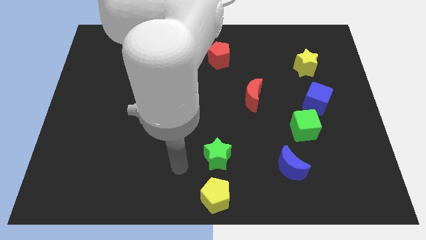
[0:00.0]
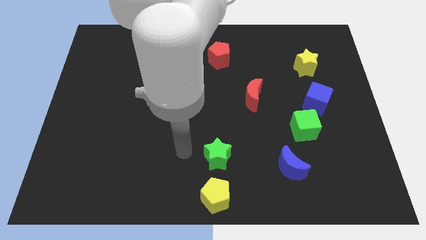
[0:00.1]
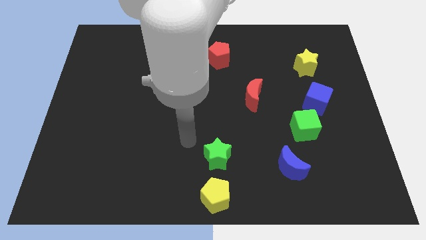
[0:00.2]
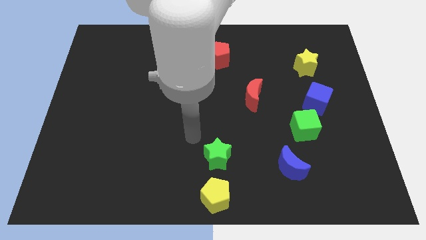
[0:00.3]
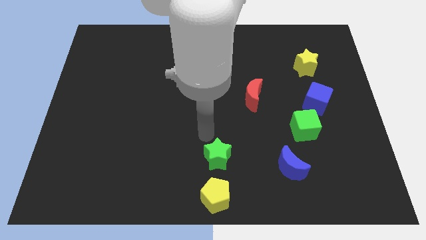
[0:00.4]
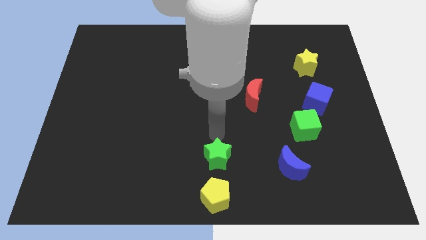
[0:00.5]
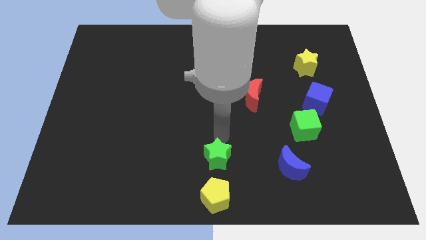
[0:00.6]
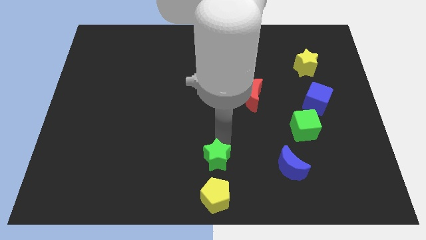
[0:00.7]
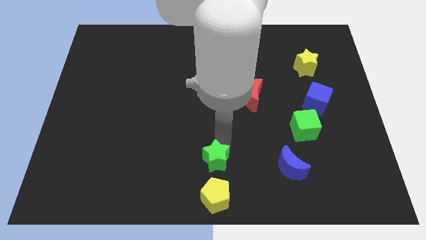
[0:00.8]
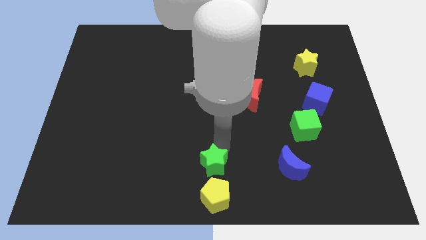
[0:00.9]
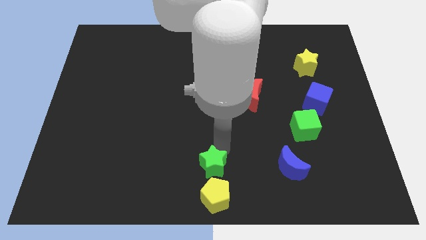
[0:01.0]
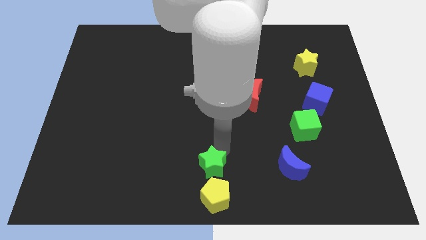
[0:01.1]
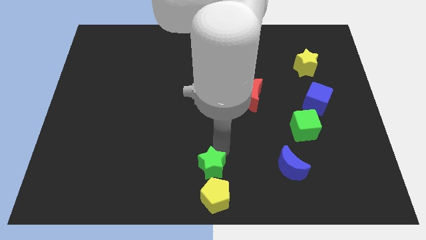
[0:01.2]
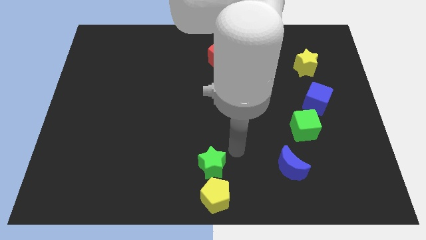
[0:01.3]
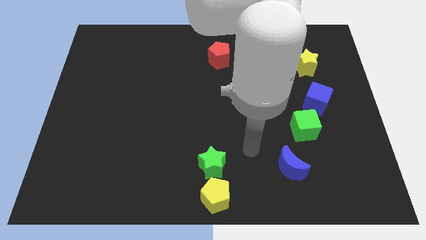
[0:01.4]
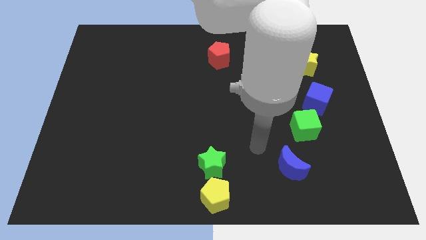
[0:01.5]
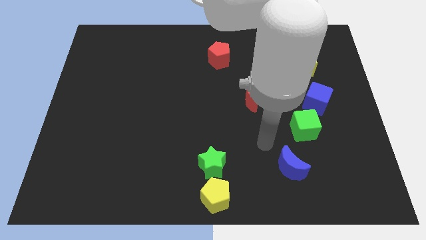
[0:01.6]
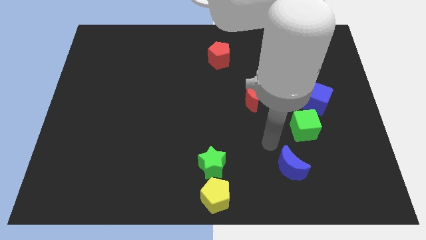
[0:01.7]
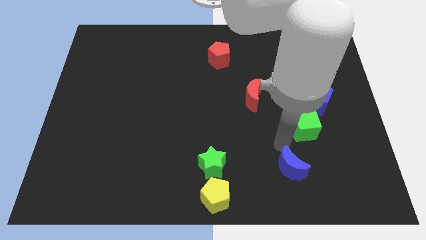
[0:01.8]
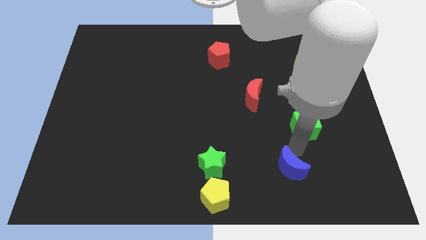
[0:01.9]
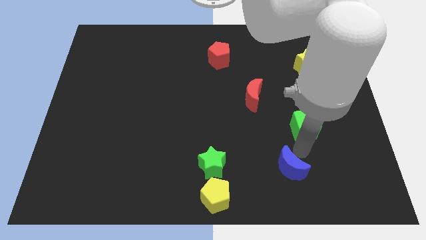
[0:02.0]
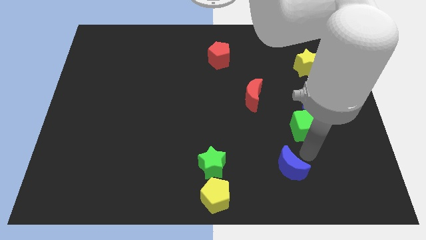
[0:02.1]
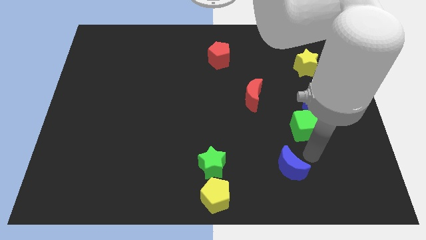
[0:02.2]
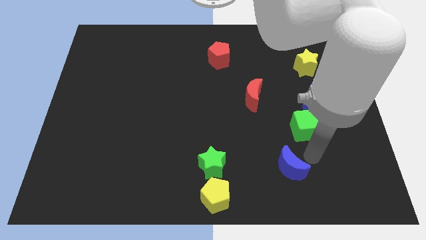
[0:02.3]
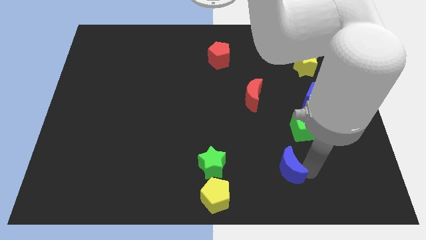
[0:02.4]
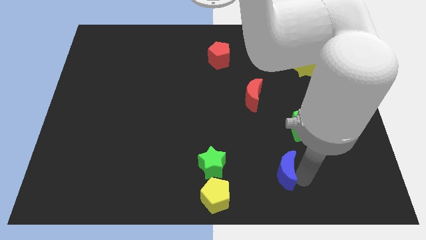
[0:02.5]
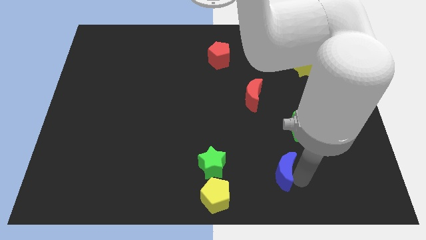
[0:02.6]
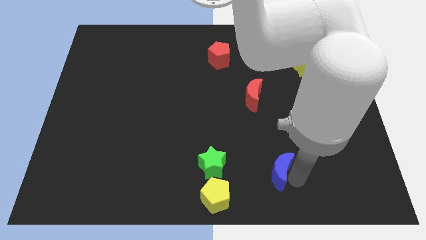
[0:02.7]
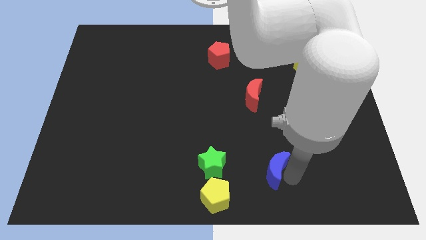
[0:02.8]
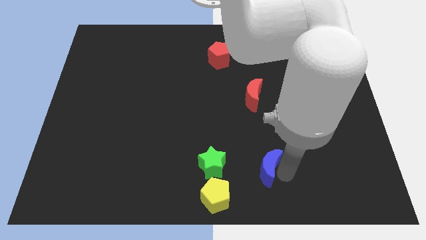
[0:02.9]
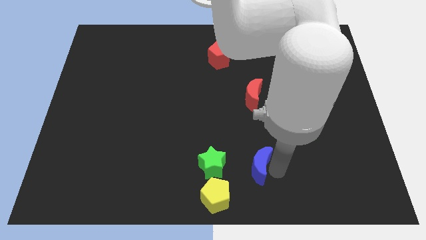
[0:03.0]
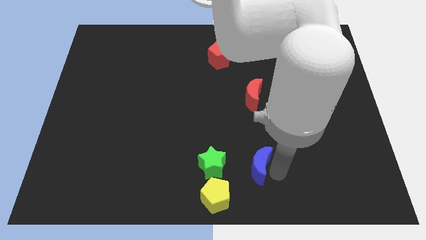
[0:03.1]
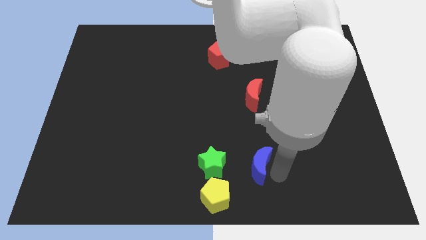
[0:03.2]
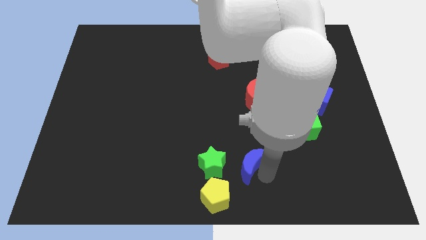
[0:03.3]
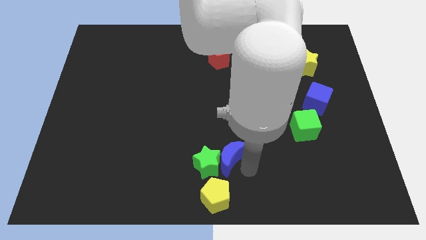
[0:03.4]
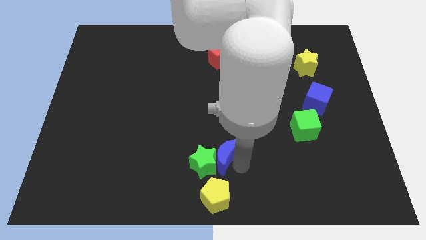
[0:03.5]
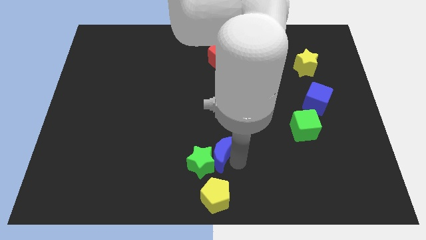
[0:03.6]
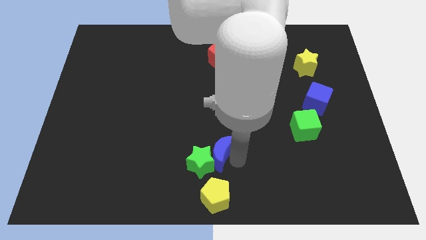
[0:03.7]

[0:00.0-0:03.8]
push the blue moon into the green star

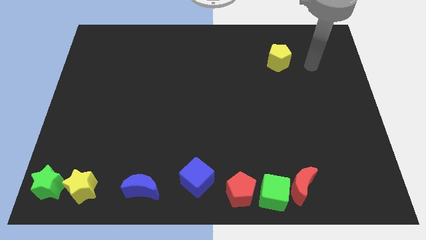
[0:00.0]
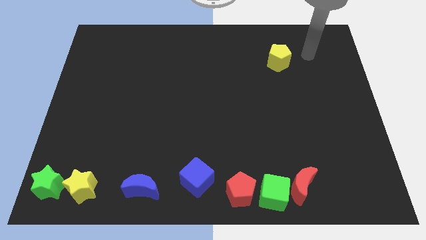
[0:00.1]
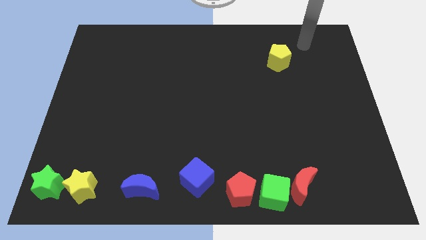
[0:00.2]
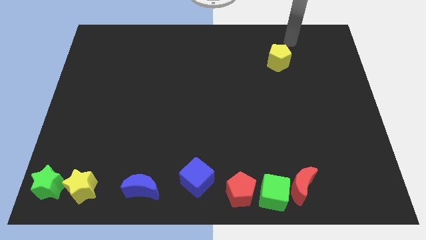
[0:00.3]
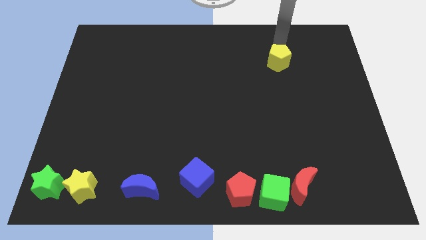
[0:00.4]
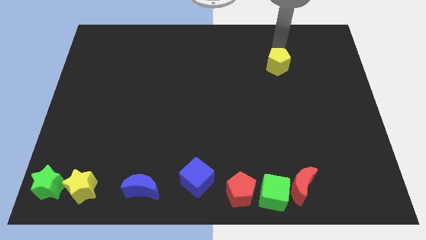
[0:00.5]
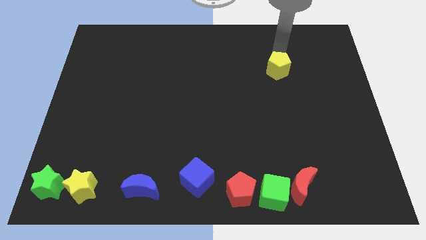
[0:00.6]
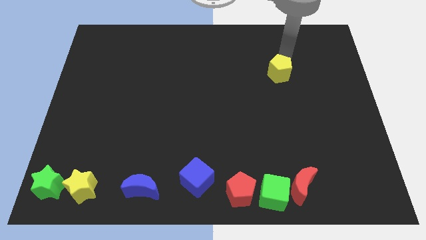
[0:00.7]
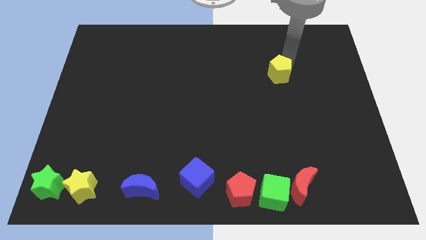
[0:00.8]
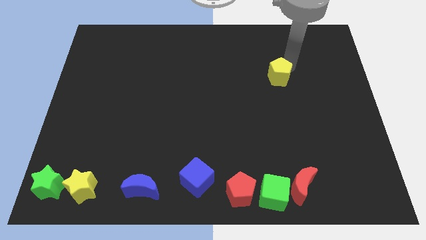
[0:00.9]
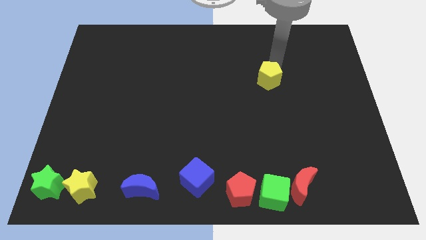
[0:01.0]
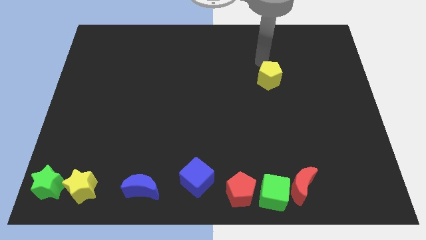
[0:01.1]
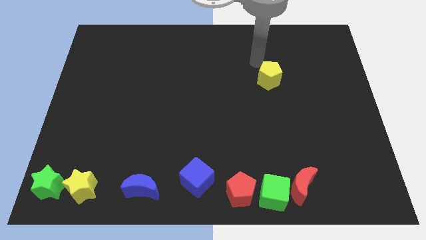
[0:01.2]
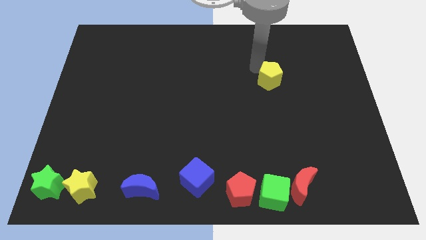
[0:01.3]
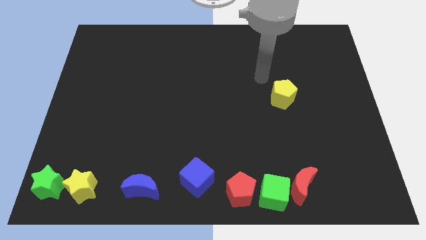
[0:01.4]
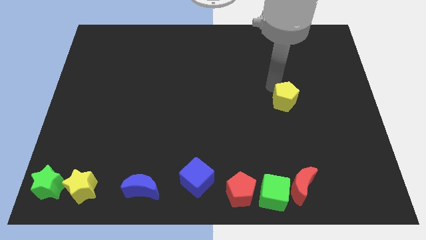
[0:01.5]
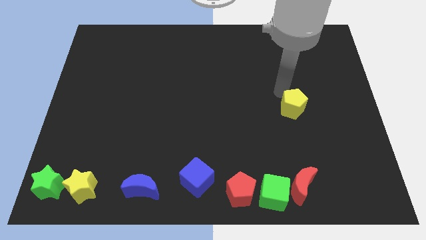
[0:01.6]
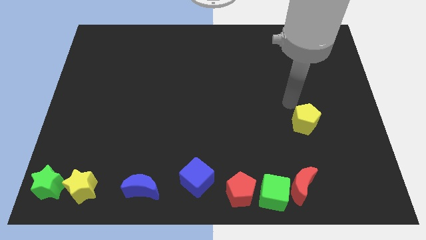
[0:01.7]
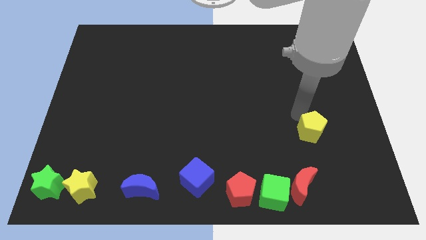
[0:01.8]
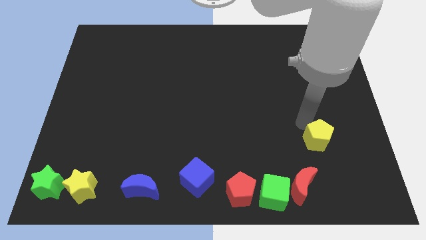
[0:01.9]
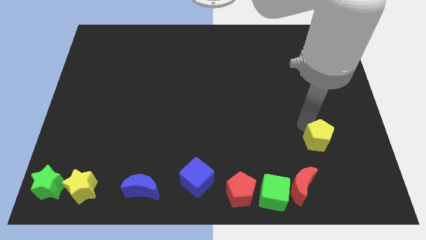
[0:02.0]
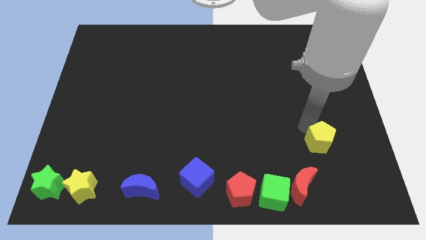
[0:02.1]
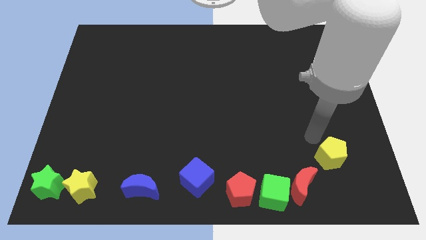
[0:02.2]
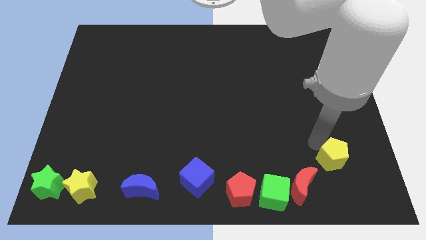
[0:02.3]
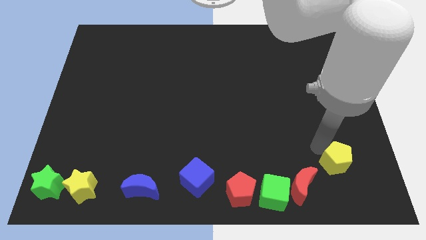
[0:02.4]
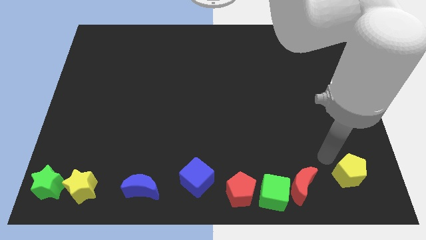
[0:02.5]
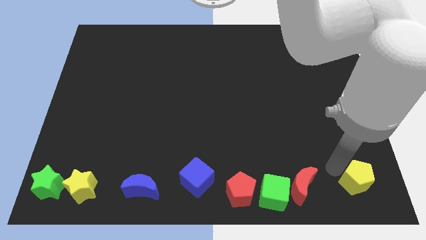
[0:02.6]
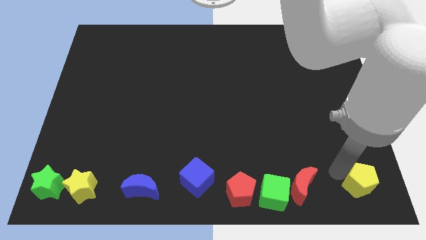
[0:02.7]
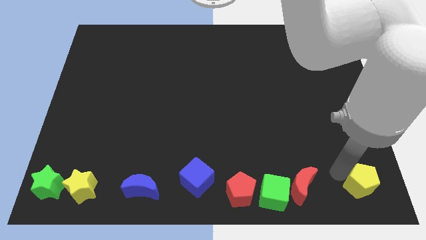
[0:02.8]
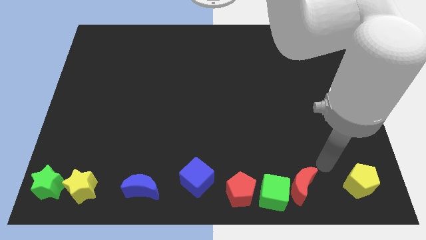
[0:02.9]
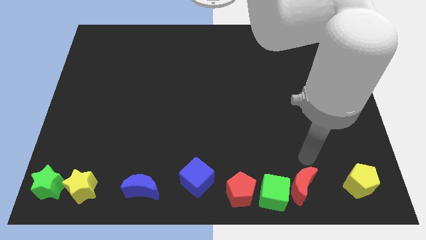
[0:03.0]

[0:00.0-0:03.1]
place the yellow pentagon at the bottom right corner

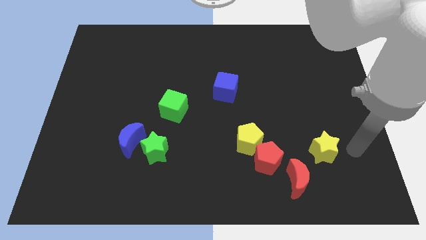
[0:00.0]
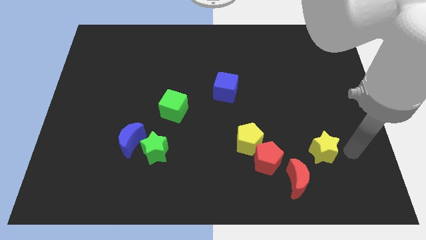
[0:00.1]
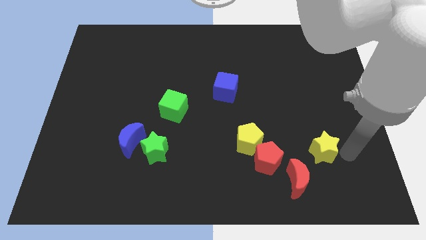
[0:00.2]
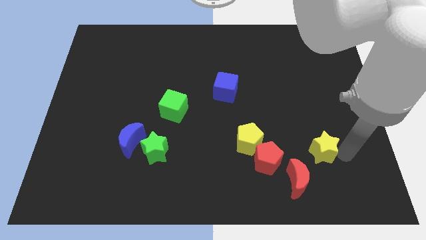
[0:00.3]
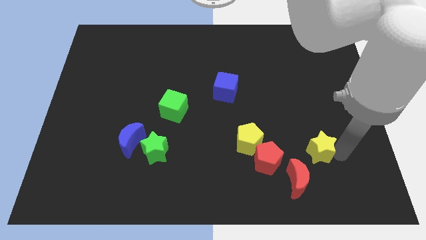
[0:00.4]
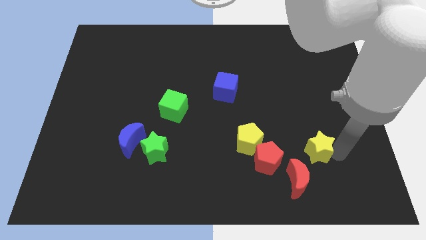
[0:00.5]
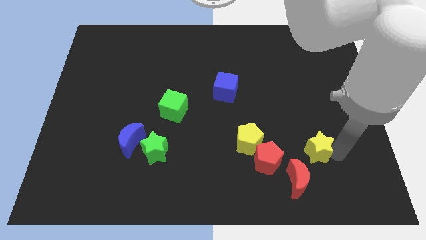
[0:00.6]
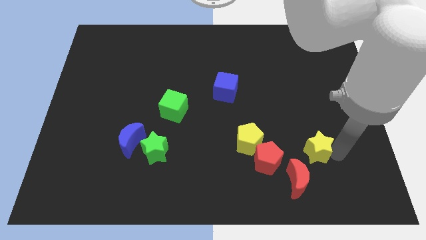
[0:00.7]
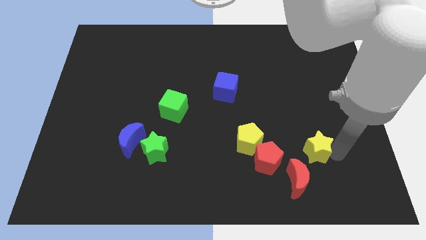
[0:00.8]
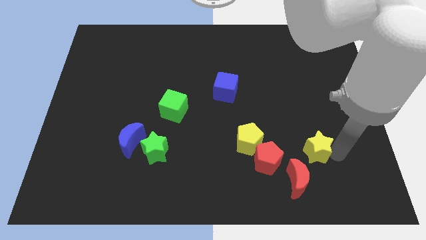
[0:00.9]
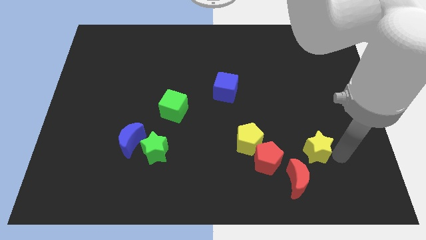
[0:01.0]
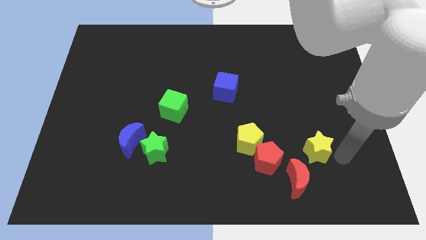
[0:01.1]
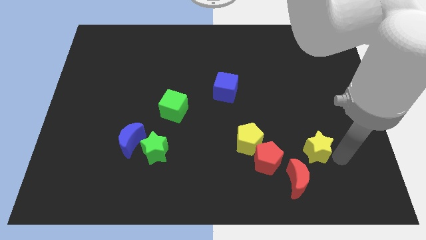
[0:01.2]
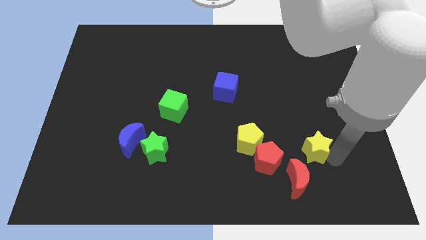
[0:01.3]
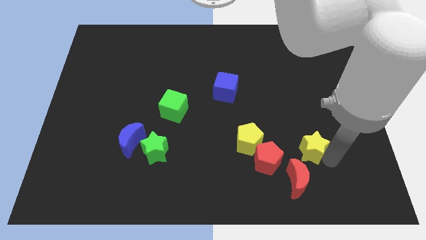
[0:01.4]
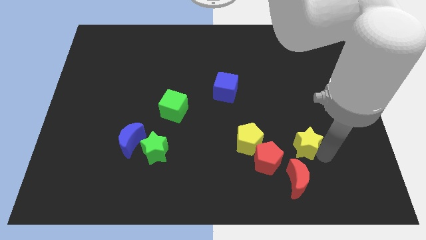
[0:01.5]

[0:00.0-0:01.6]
push the yellow star towards the red crescent

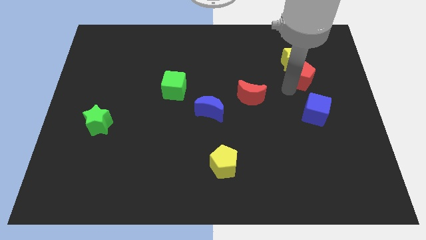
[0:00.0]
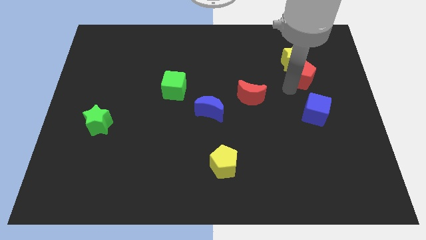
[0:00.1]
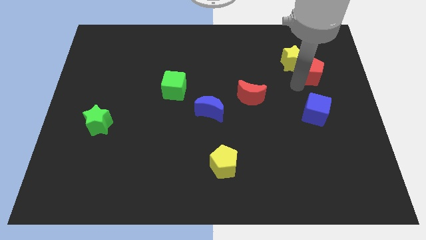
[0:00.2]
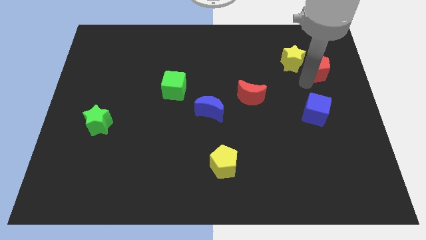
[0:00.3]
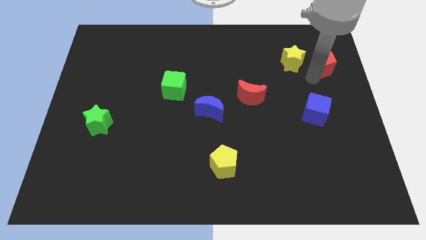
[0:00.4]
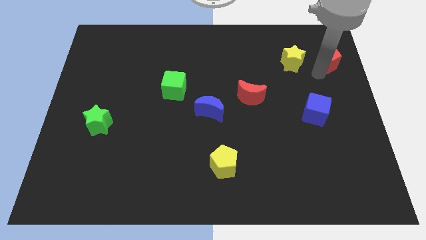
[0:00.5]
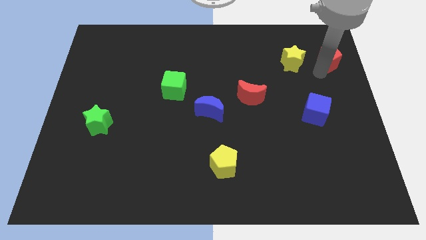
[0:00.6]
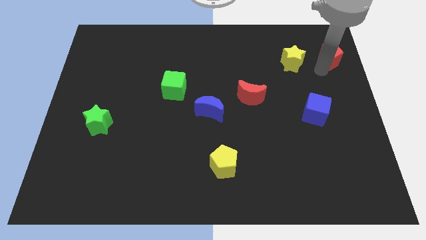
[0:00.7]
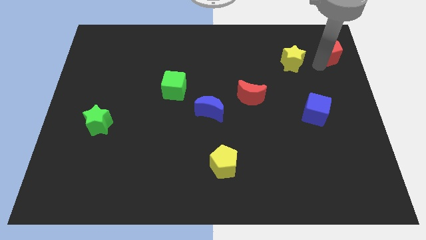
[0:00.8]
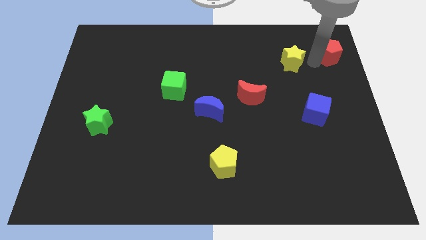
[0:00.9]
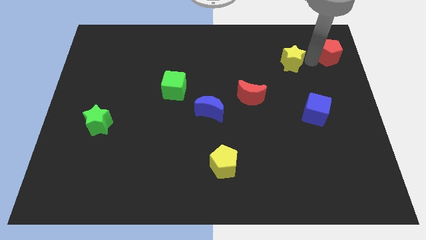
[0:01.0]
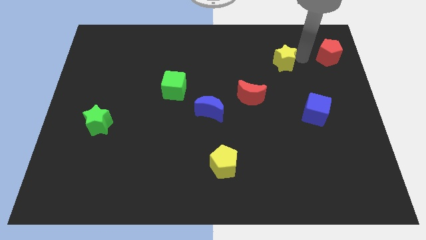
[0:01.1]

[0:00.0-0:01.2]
move the red pentagon to the top right corner
